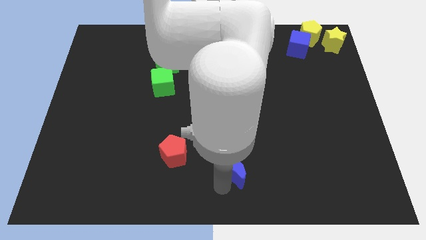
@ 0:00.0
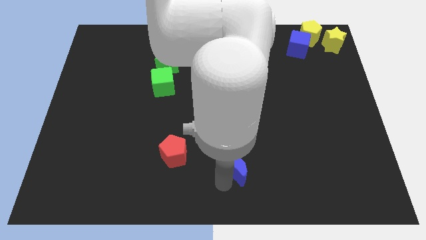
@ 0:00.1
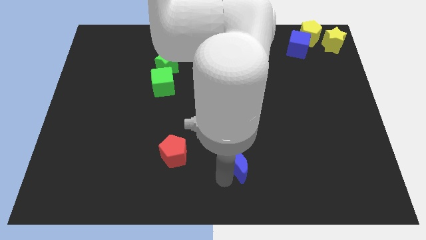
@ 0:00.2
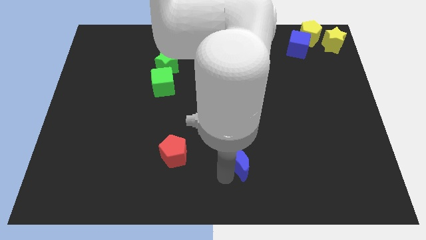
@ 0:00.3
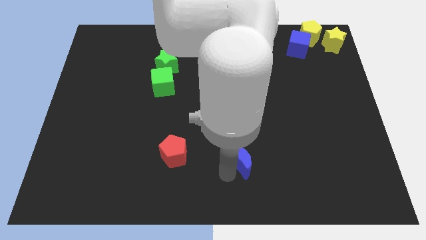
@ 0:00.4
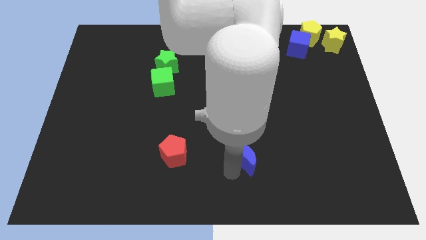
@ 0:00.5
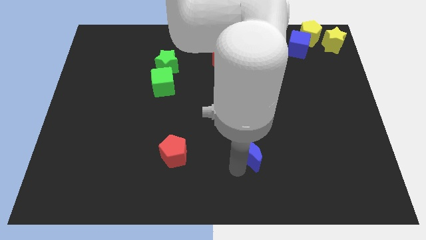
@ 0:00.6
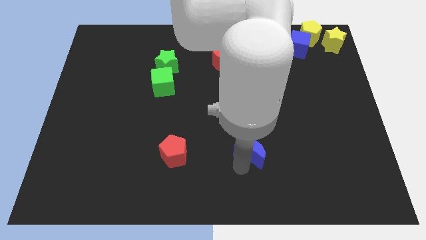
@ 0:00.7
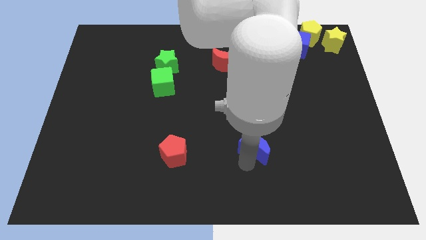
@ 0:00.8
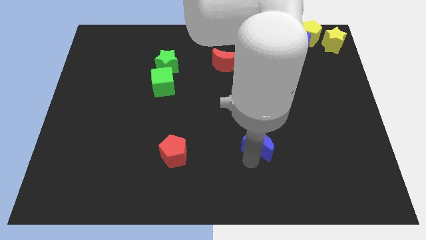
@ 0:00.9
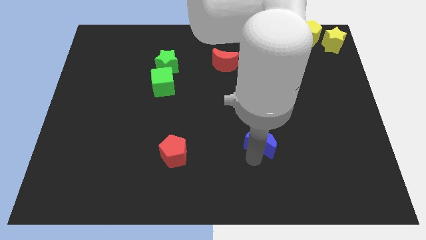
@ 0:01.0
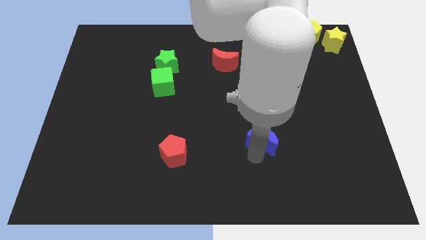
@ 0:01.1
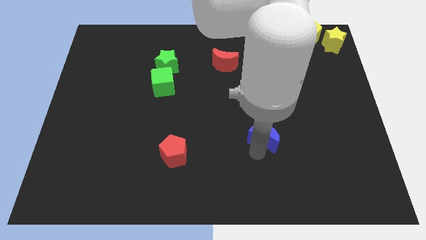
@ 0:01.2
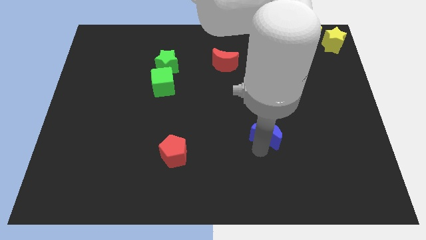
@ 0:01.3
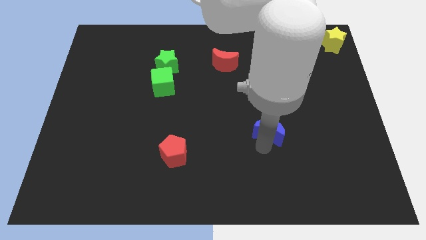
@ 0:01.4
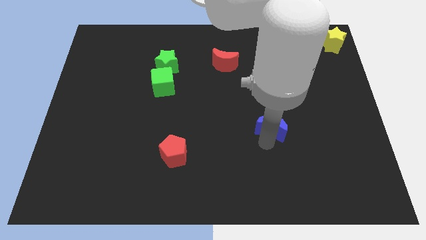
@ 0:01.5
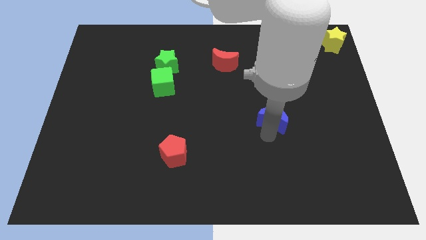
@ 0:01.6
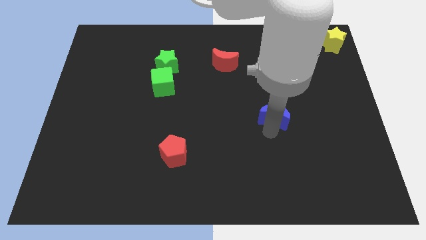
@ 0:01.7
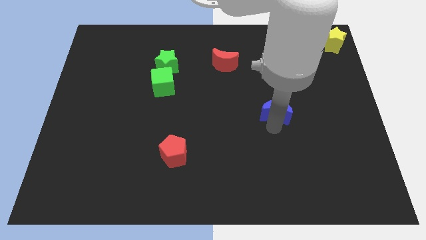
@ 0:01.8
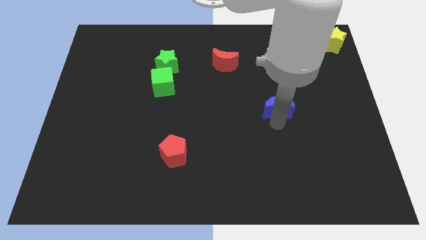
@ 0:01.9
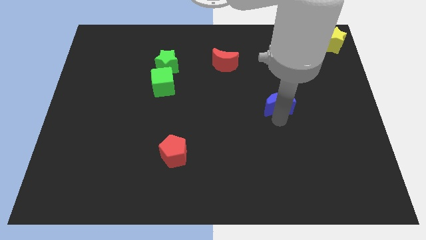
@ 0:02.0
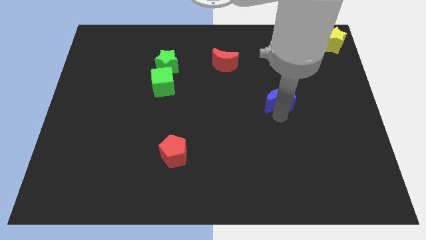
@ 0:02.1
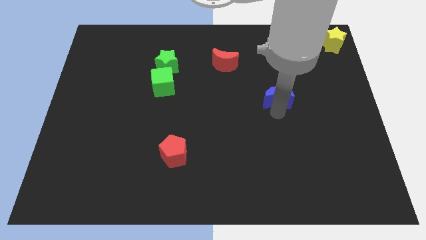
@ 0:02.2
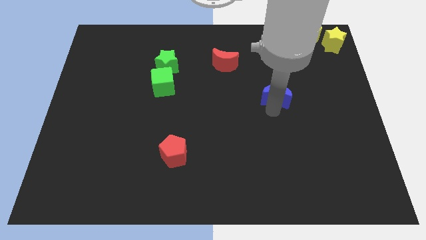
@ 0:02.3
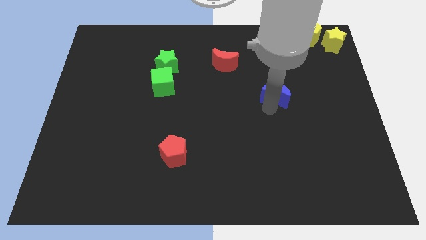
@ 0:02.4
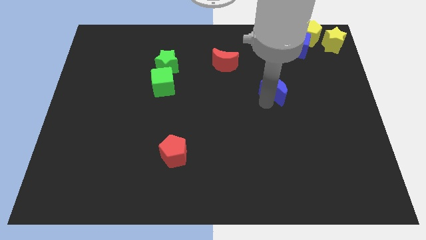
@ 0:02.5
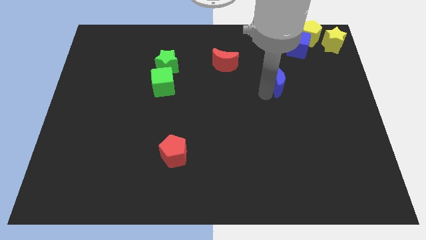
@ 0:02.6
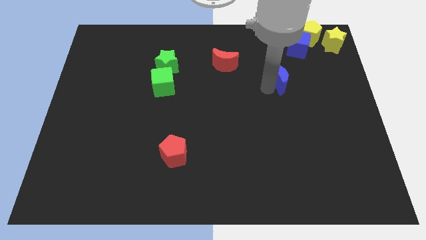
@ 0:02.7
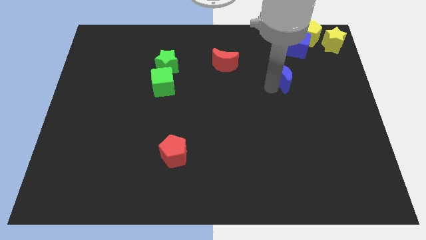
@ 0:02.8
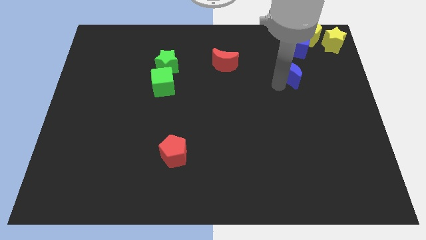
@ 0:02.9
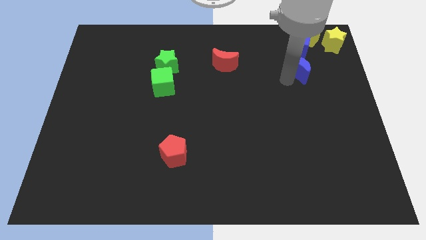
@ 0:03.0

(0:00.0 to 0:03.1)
place the blue moon down to the blue cube

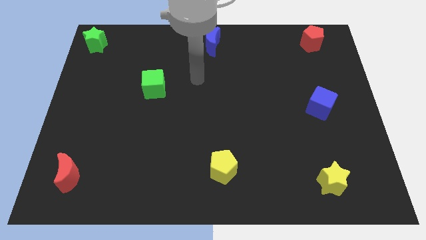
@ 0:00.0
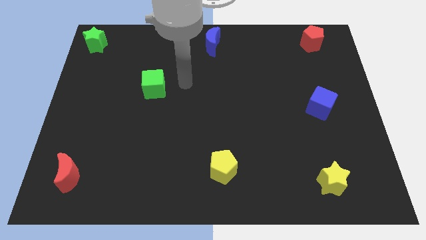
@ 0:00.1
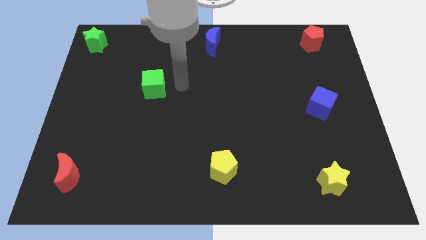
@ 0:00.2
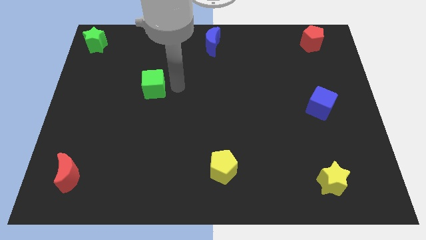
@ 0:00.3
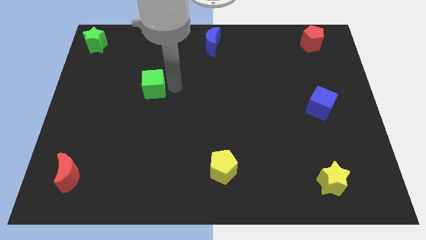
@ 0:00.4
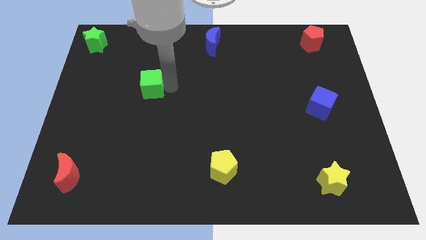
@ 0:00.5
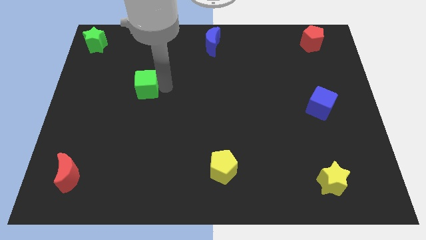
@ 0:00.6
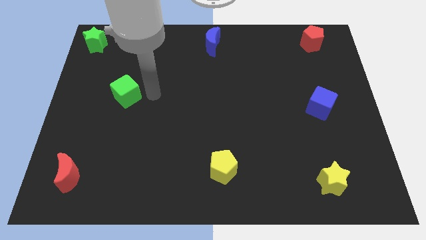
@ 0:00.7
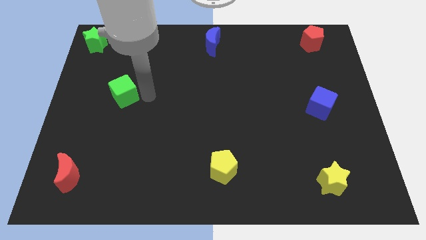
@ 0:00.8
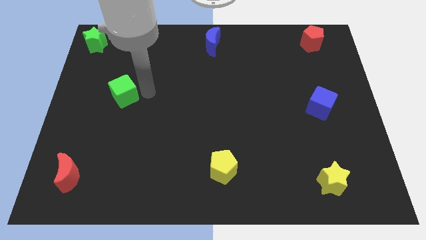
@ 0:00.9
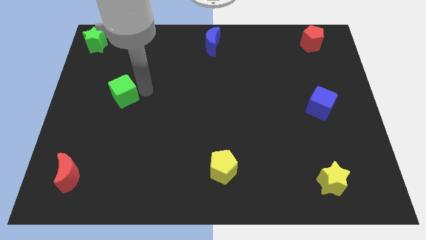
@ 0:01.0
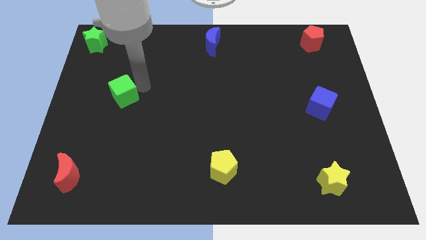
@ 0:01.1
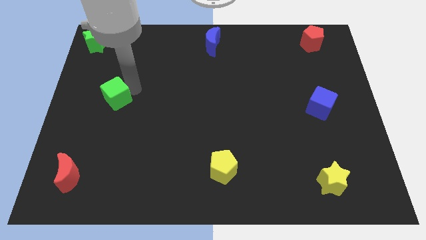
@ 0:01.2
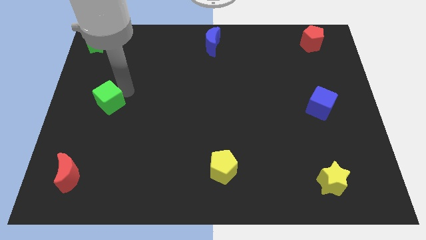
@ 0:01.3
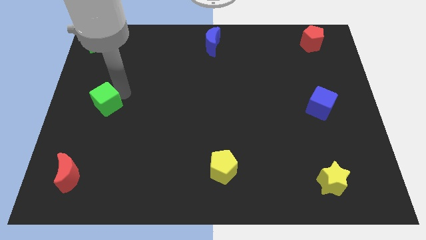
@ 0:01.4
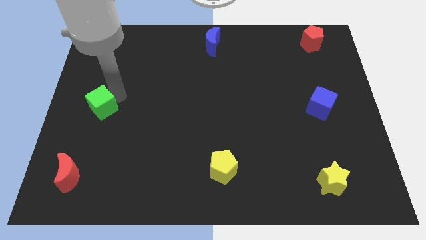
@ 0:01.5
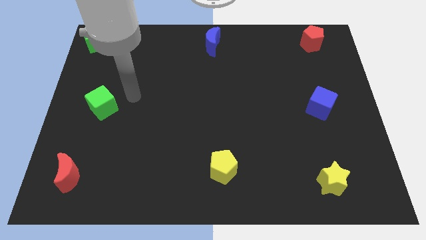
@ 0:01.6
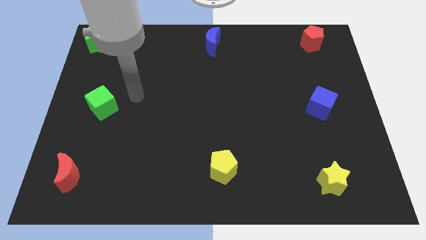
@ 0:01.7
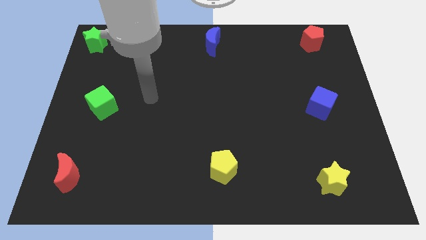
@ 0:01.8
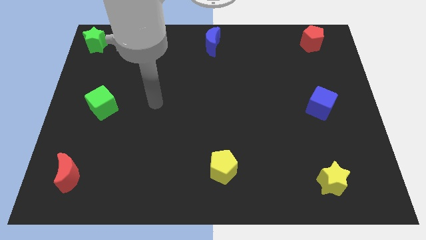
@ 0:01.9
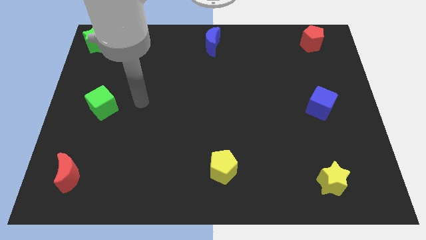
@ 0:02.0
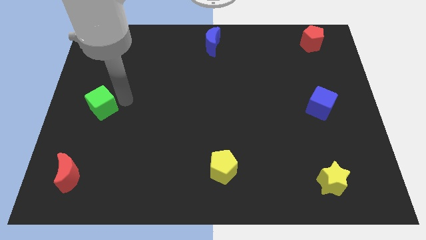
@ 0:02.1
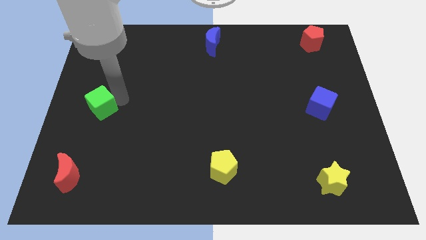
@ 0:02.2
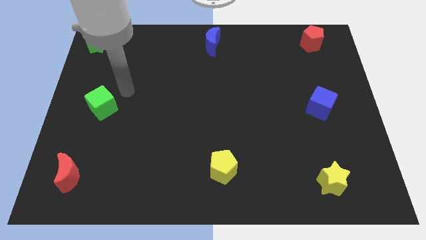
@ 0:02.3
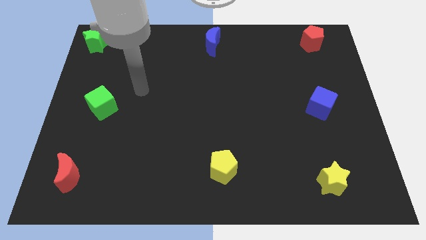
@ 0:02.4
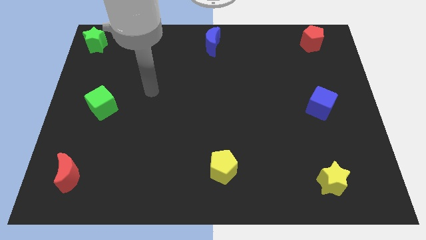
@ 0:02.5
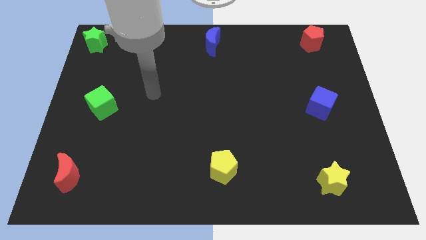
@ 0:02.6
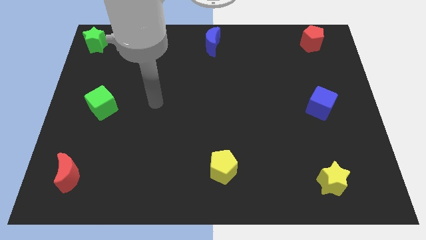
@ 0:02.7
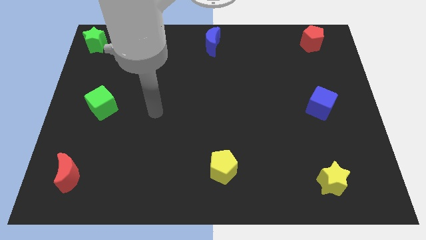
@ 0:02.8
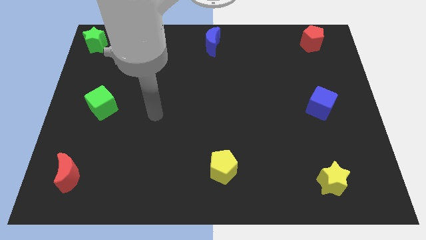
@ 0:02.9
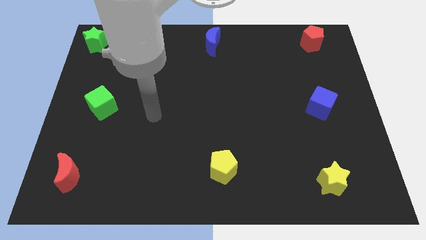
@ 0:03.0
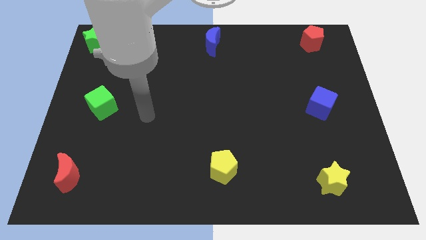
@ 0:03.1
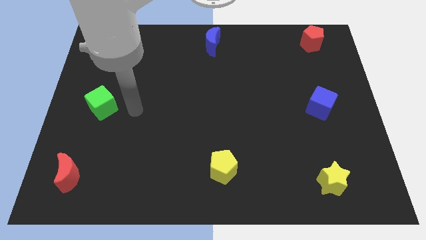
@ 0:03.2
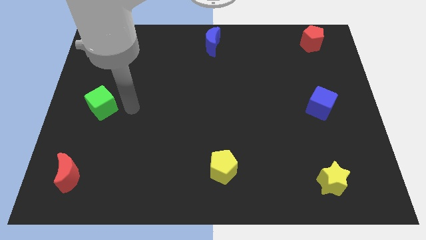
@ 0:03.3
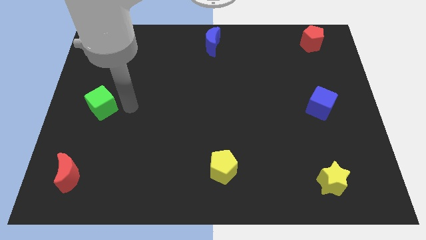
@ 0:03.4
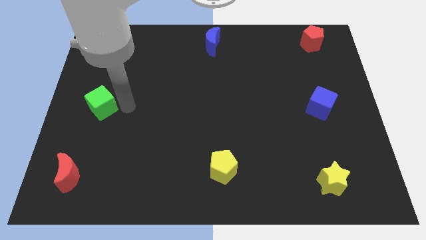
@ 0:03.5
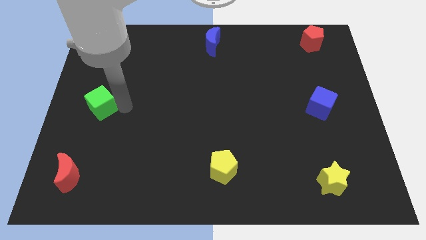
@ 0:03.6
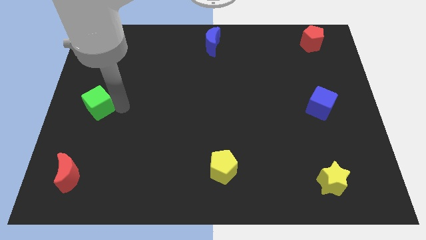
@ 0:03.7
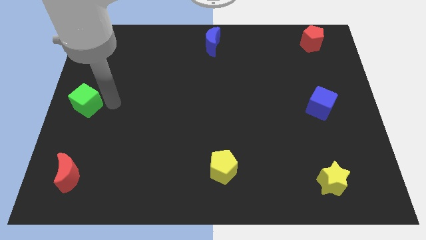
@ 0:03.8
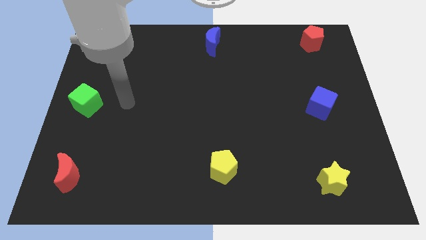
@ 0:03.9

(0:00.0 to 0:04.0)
push the green cube towards the left center of the board

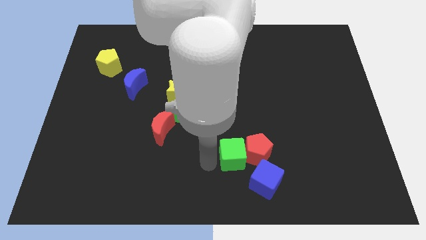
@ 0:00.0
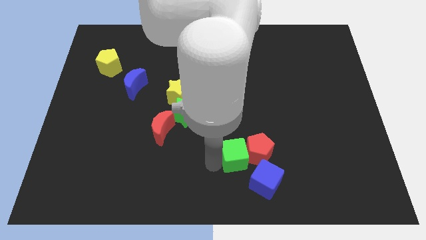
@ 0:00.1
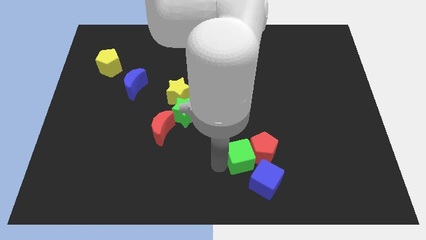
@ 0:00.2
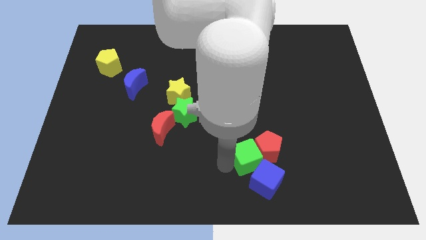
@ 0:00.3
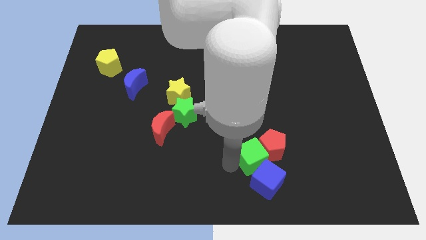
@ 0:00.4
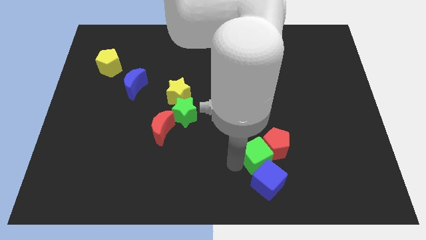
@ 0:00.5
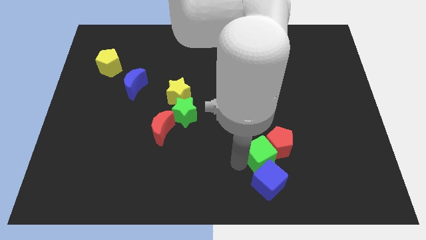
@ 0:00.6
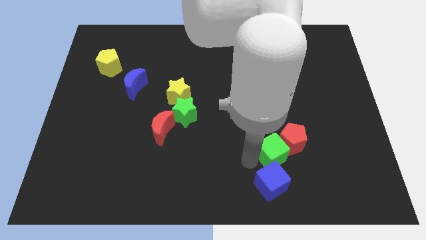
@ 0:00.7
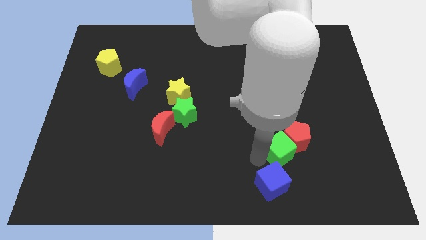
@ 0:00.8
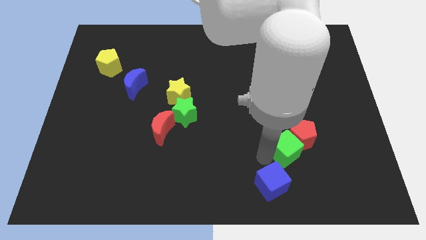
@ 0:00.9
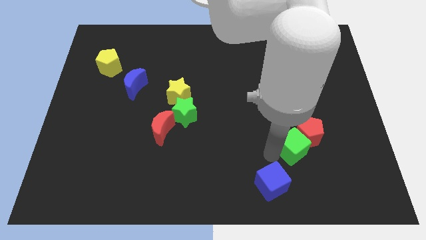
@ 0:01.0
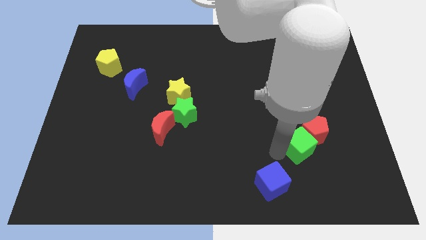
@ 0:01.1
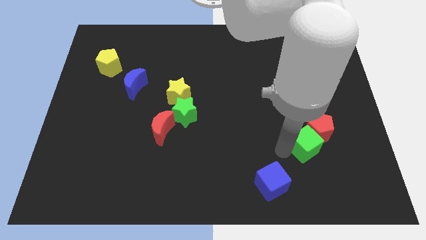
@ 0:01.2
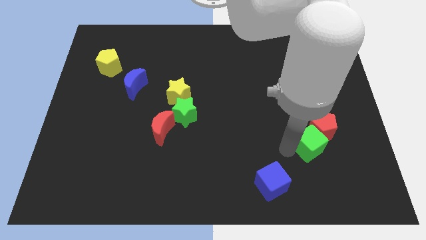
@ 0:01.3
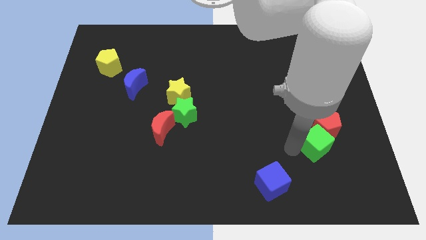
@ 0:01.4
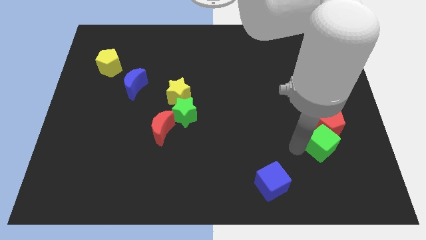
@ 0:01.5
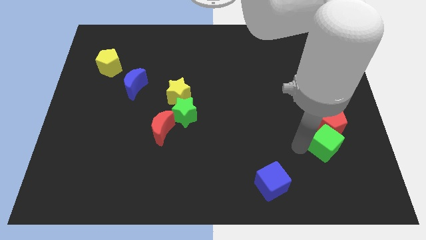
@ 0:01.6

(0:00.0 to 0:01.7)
push the green cube and red pentagon to the right side
